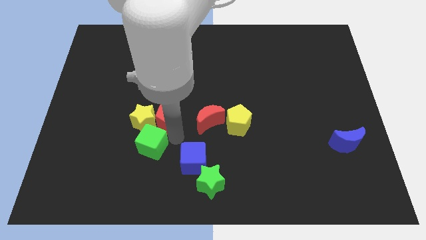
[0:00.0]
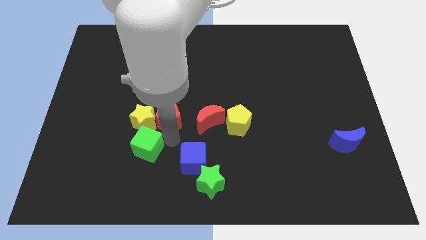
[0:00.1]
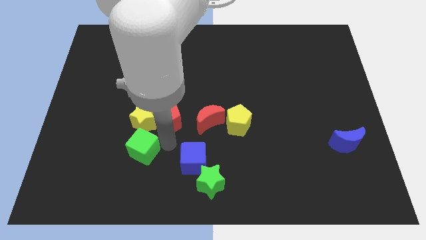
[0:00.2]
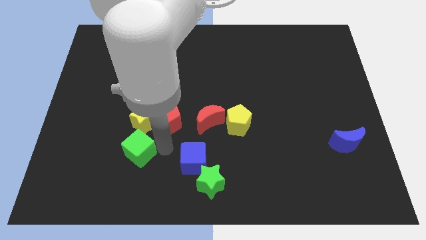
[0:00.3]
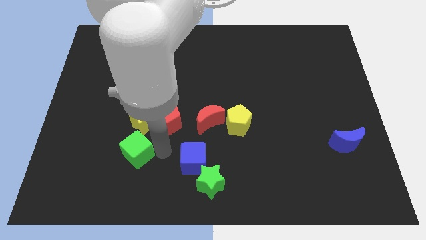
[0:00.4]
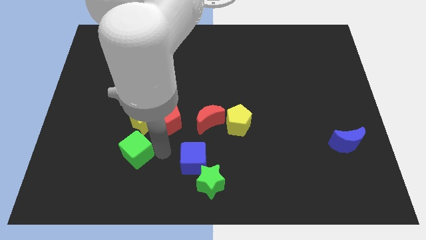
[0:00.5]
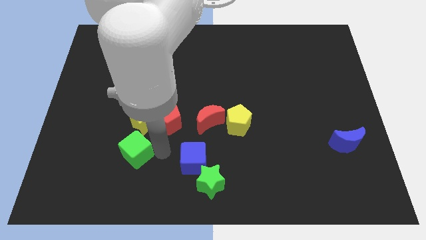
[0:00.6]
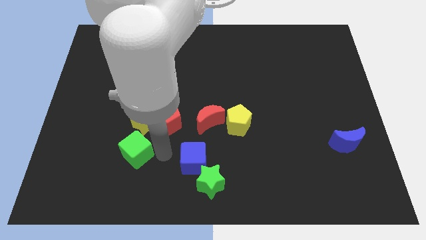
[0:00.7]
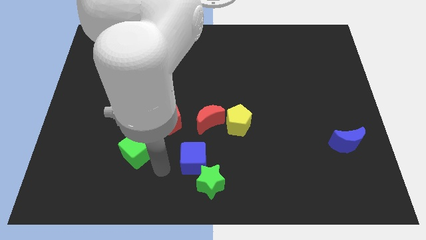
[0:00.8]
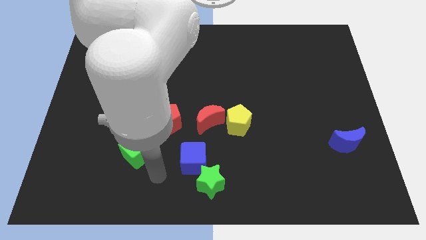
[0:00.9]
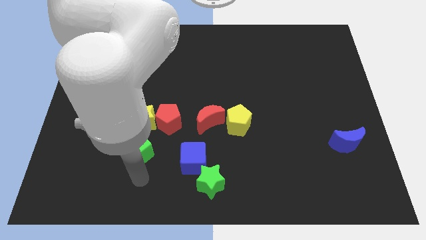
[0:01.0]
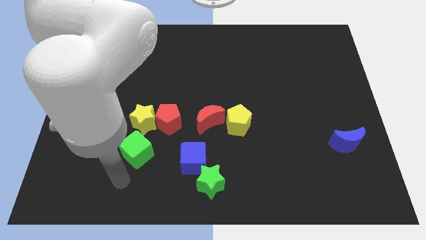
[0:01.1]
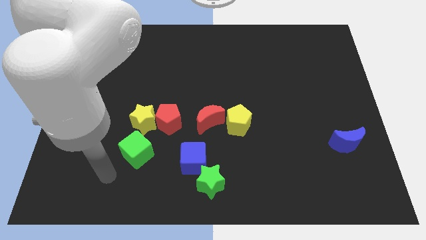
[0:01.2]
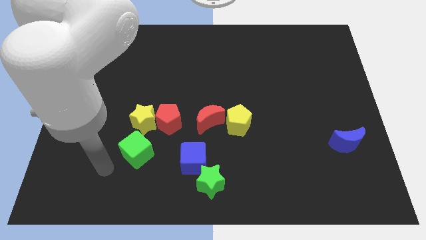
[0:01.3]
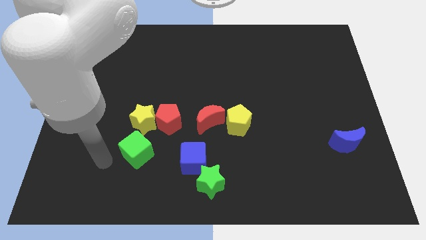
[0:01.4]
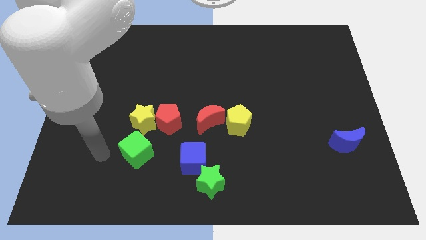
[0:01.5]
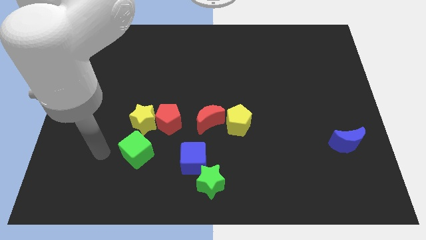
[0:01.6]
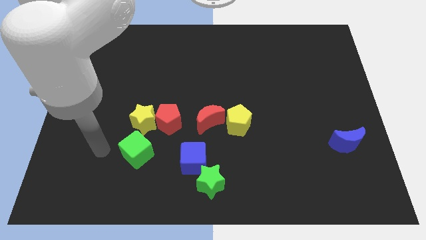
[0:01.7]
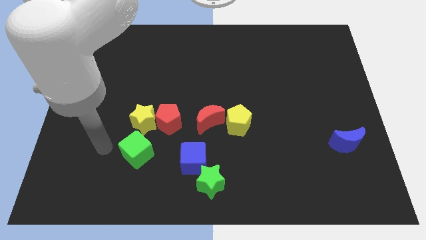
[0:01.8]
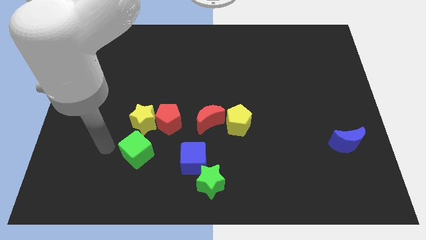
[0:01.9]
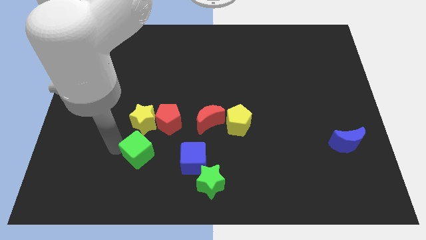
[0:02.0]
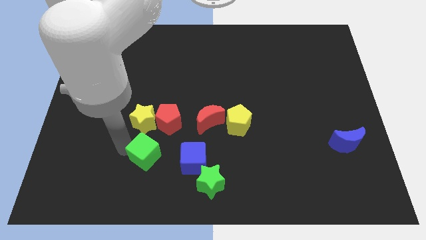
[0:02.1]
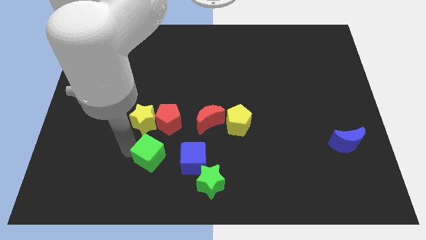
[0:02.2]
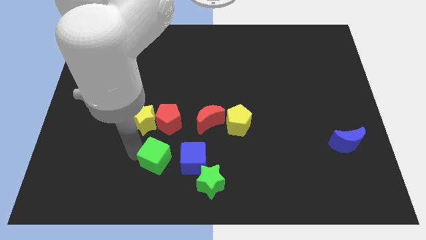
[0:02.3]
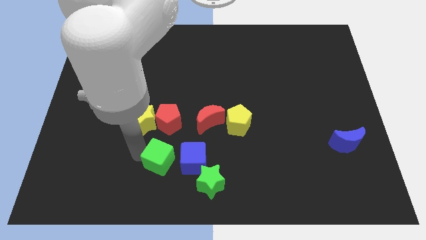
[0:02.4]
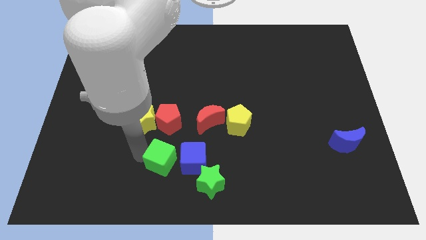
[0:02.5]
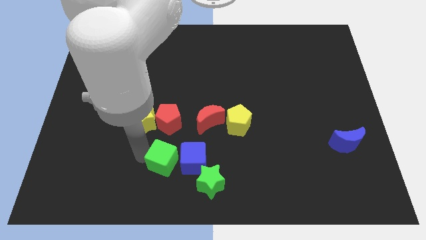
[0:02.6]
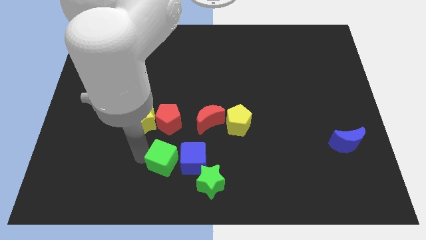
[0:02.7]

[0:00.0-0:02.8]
move the green cube close to the blue cube

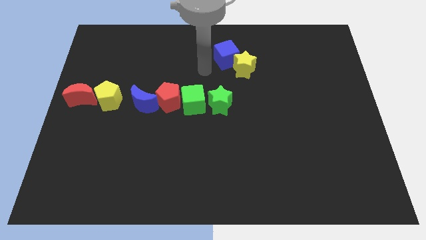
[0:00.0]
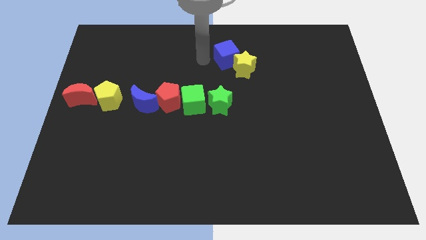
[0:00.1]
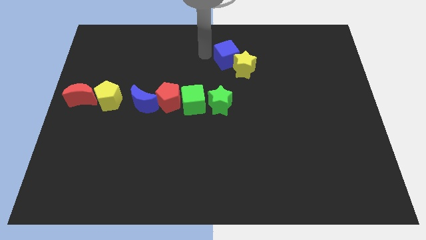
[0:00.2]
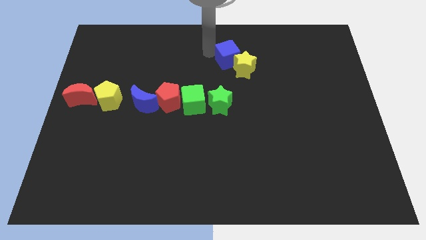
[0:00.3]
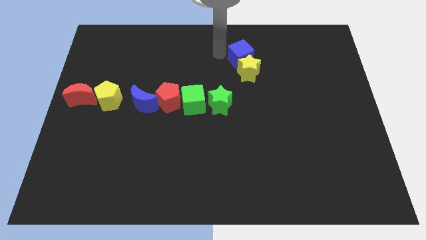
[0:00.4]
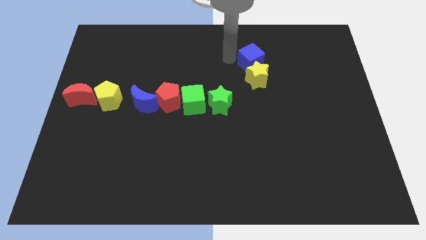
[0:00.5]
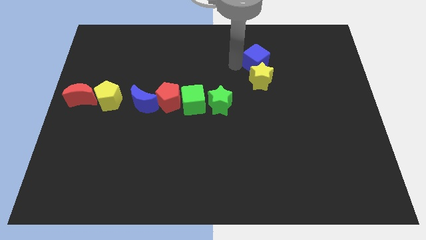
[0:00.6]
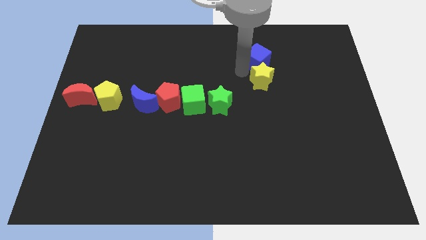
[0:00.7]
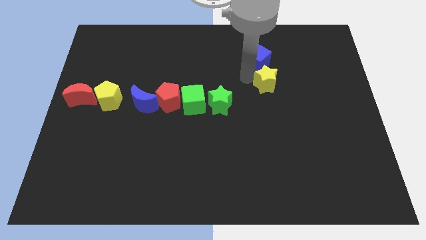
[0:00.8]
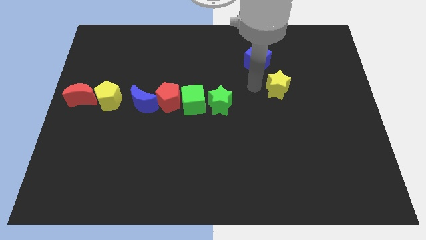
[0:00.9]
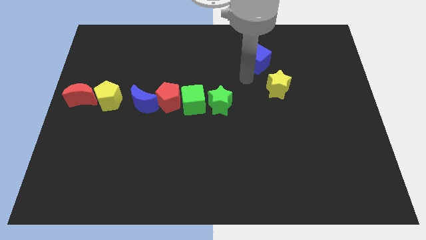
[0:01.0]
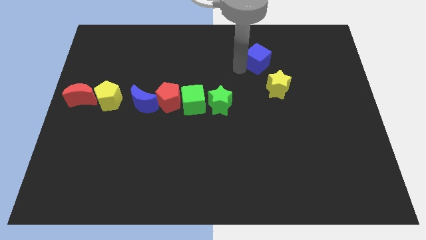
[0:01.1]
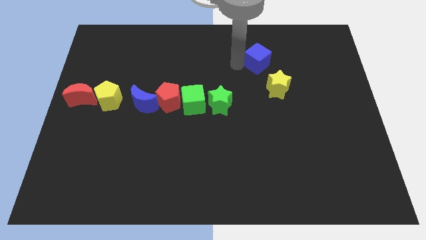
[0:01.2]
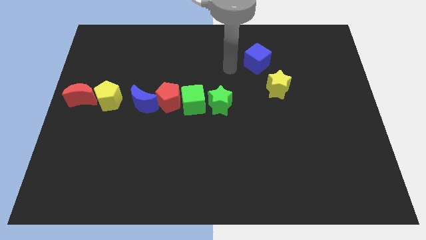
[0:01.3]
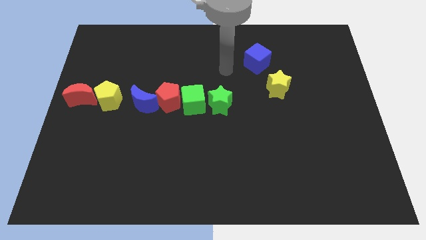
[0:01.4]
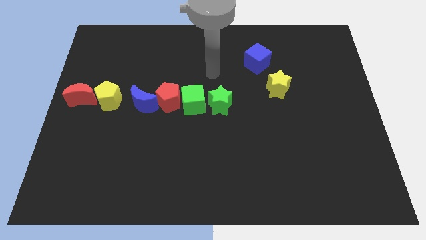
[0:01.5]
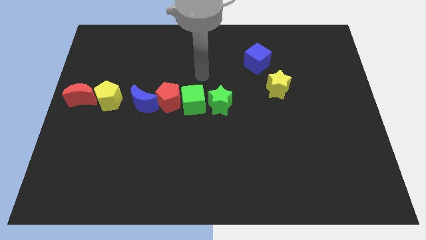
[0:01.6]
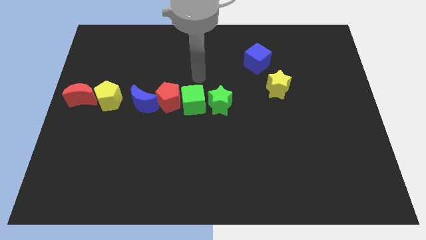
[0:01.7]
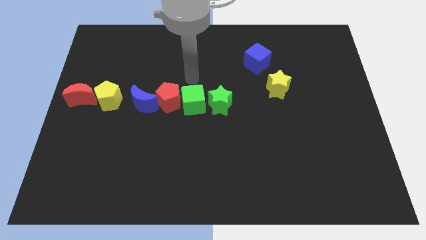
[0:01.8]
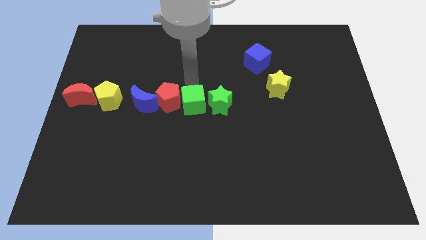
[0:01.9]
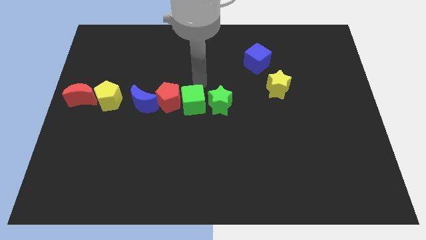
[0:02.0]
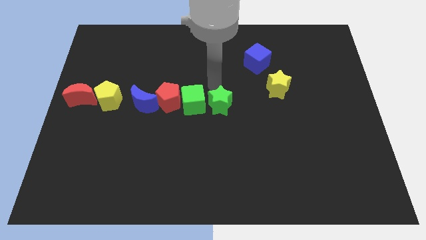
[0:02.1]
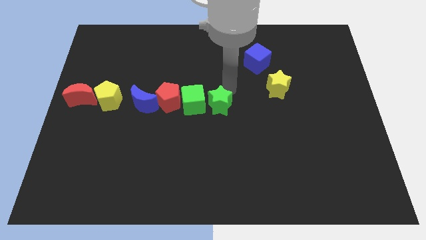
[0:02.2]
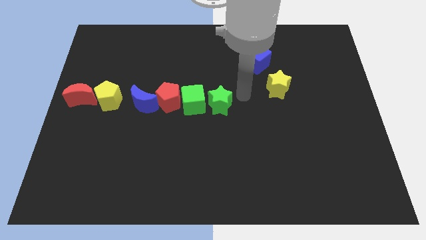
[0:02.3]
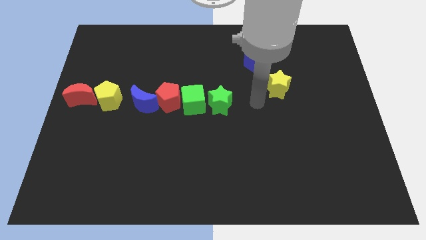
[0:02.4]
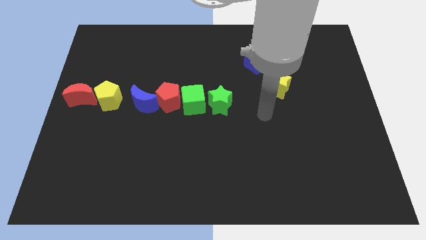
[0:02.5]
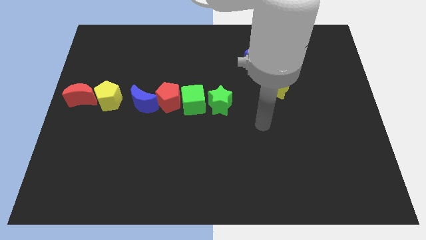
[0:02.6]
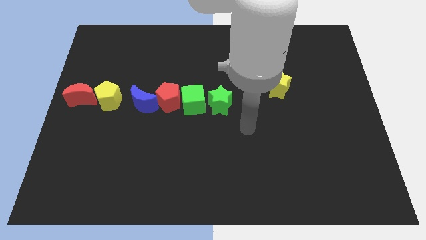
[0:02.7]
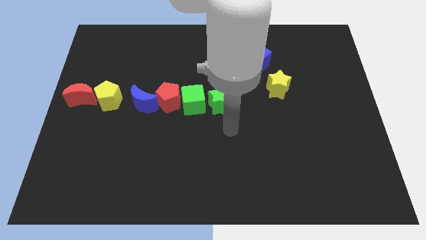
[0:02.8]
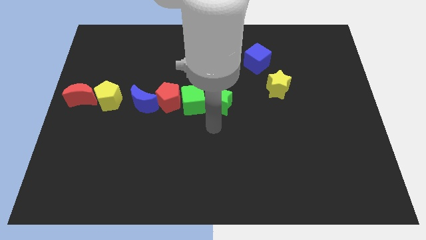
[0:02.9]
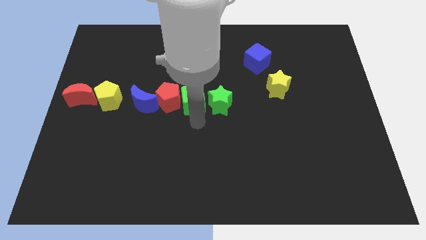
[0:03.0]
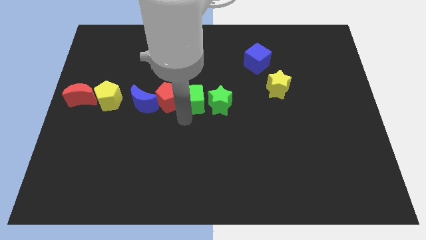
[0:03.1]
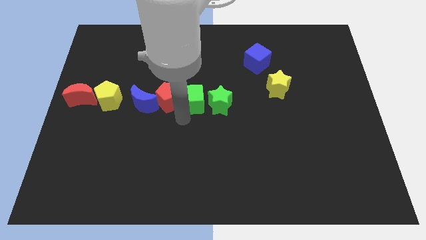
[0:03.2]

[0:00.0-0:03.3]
push the blue cube and yellow star towards the right side of the board

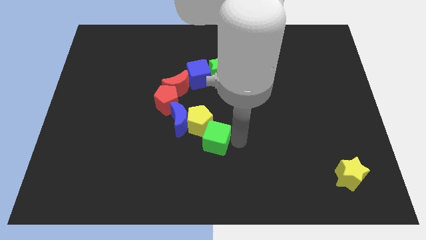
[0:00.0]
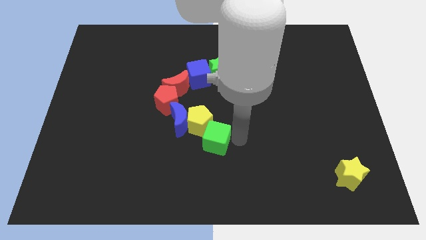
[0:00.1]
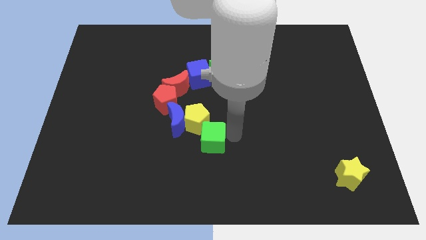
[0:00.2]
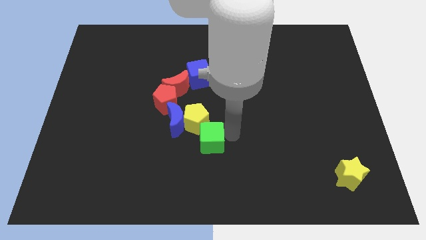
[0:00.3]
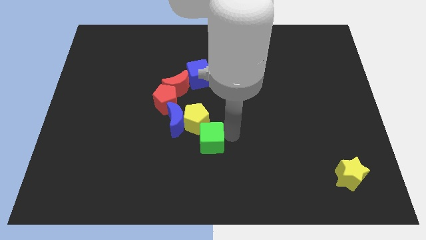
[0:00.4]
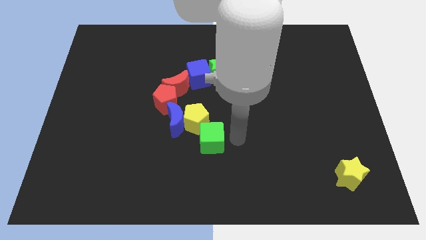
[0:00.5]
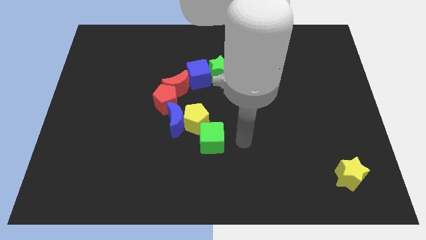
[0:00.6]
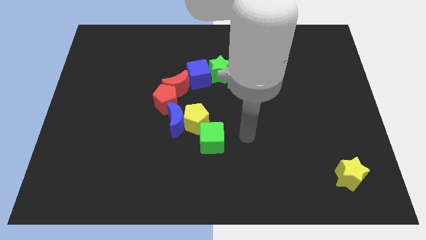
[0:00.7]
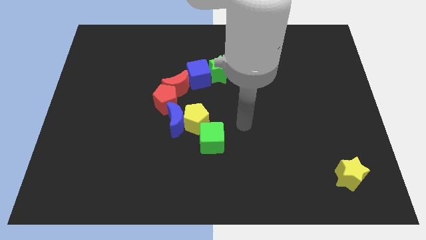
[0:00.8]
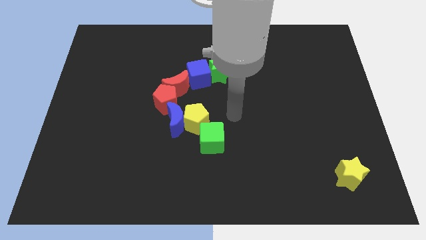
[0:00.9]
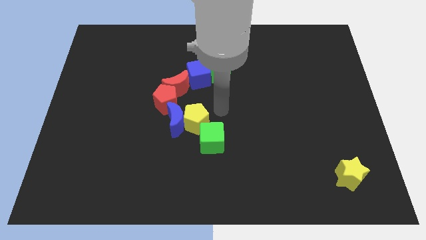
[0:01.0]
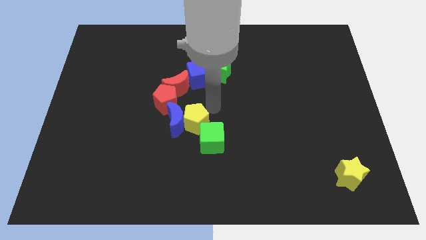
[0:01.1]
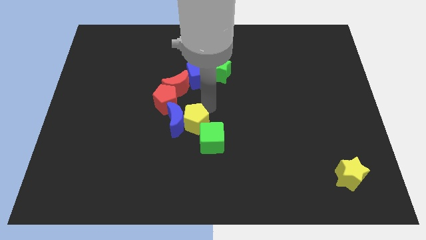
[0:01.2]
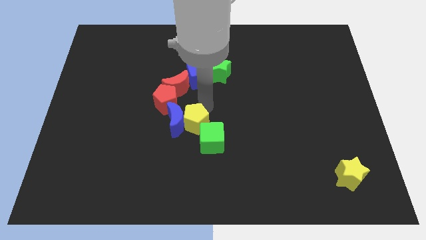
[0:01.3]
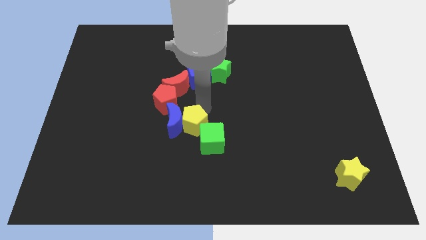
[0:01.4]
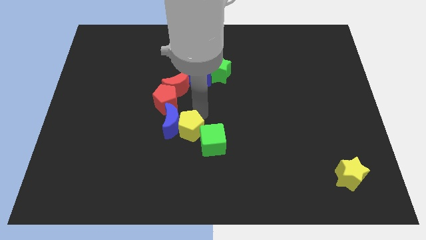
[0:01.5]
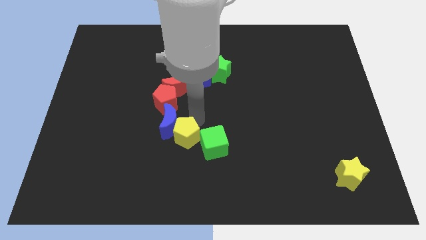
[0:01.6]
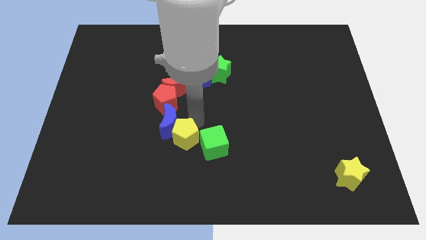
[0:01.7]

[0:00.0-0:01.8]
push the yellow pentagon in between to the blue crescent and green cube

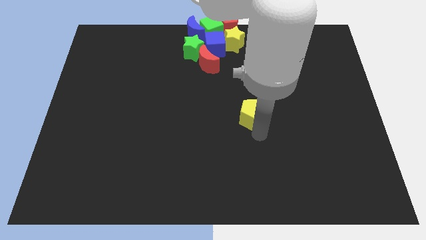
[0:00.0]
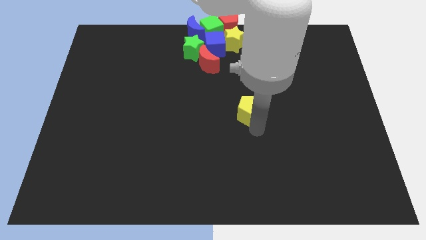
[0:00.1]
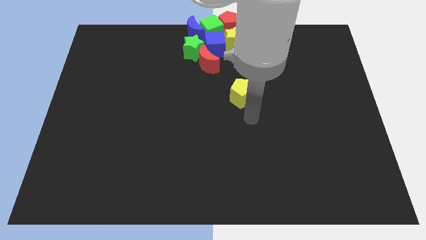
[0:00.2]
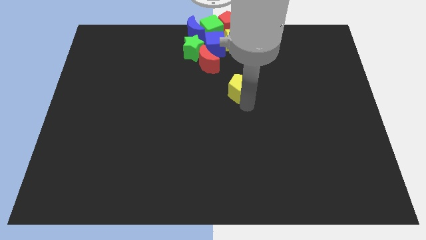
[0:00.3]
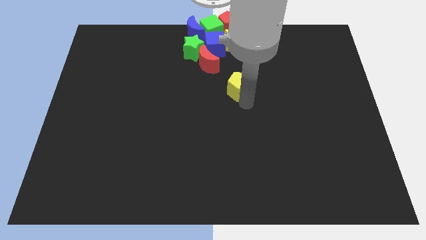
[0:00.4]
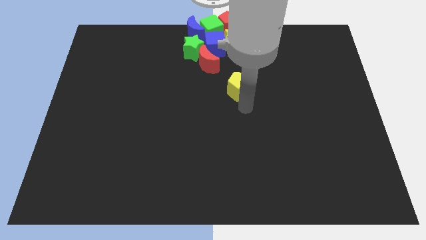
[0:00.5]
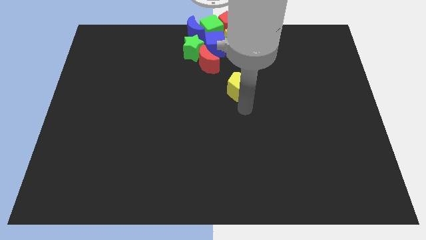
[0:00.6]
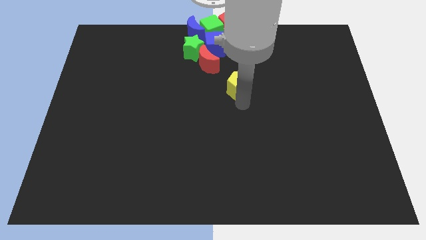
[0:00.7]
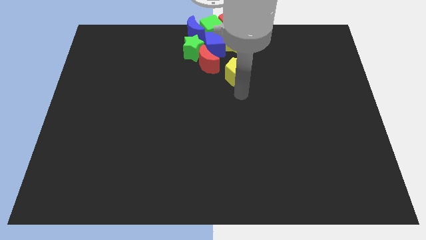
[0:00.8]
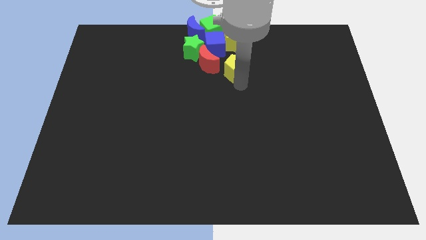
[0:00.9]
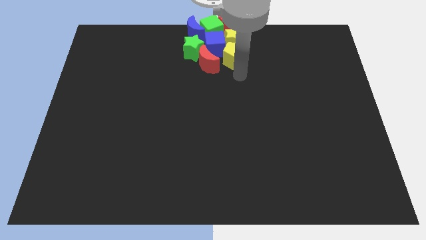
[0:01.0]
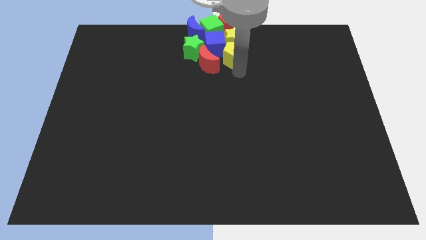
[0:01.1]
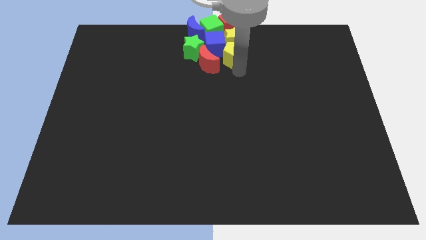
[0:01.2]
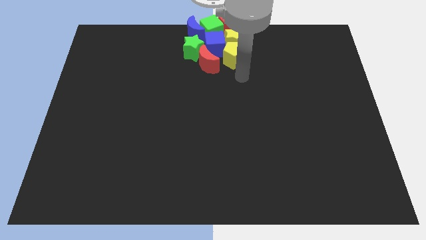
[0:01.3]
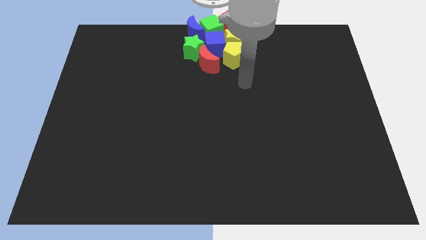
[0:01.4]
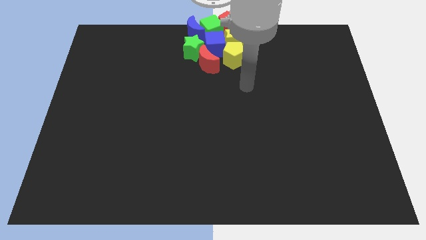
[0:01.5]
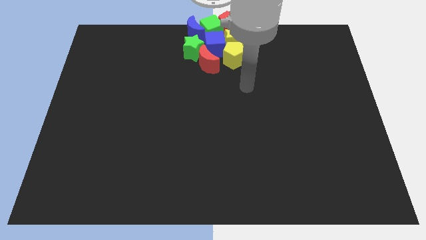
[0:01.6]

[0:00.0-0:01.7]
place the yellow pentagon under the yellow star
